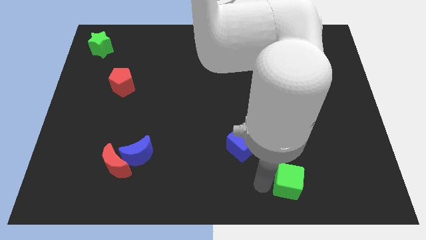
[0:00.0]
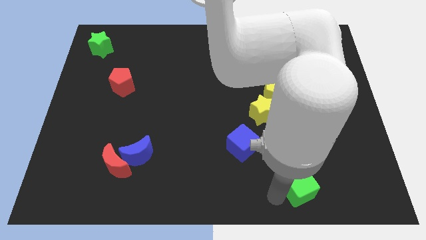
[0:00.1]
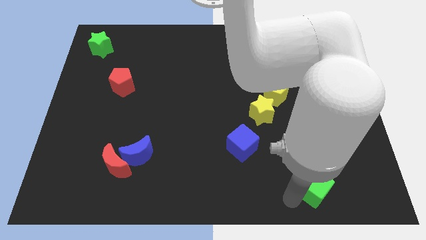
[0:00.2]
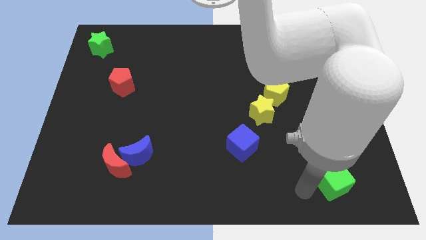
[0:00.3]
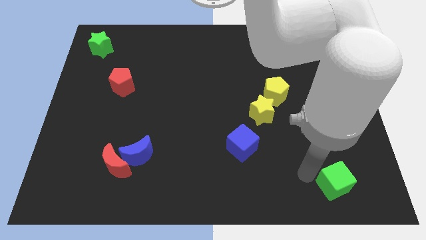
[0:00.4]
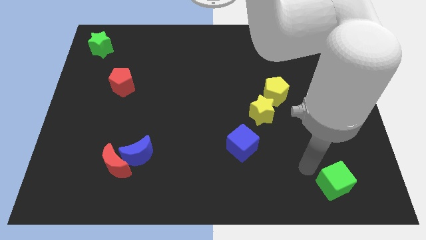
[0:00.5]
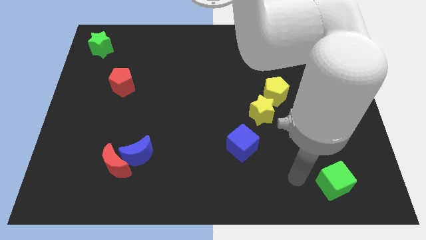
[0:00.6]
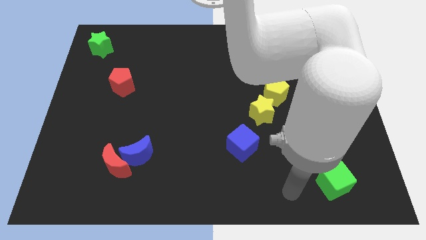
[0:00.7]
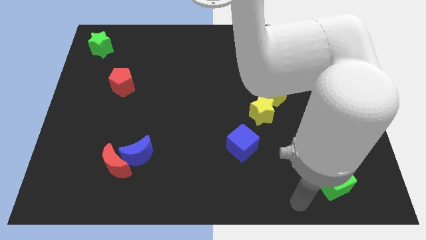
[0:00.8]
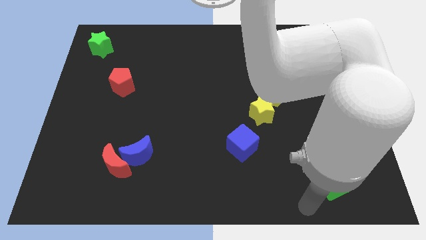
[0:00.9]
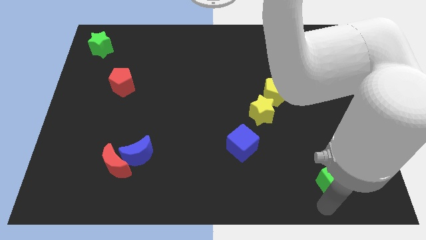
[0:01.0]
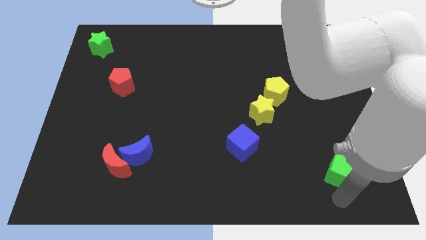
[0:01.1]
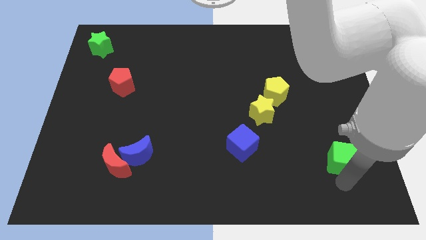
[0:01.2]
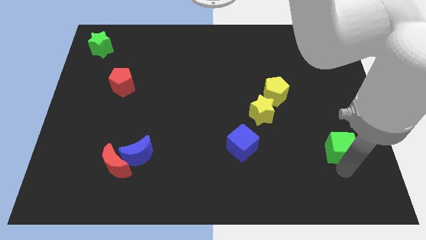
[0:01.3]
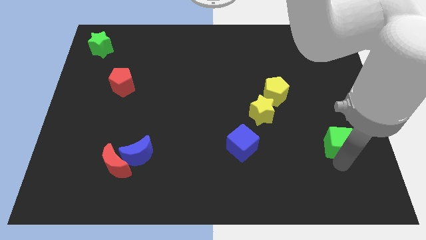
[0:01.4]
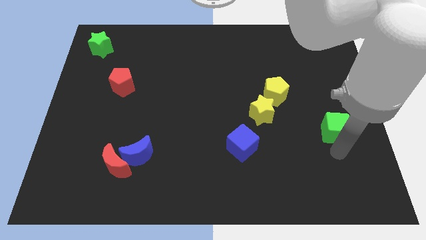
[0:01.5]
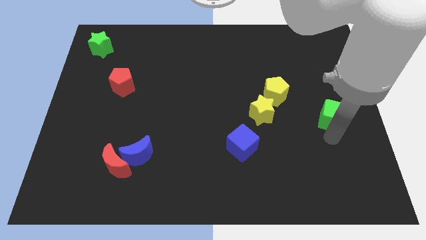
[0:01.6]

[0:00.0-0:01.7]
push the green cube to the right side of the green star

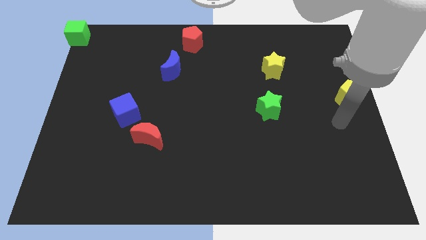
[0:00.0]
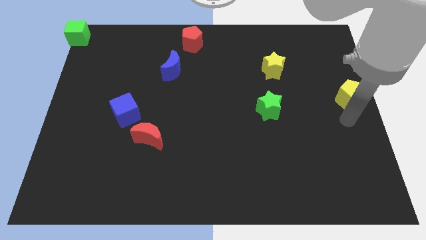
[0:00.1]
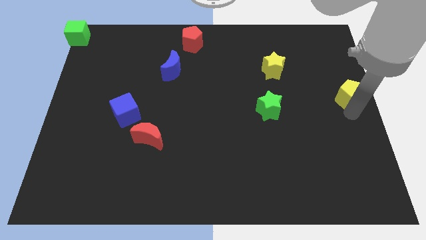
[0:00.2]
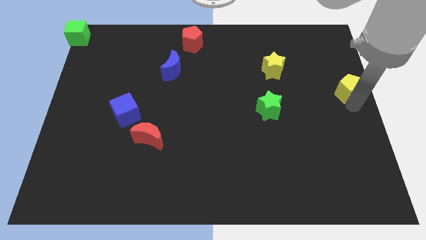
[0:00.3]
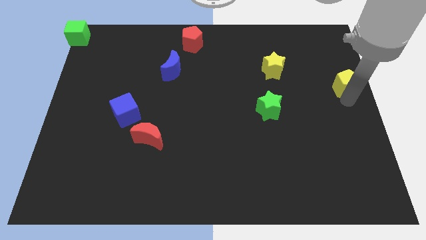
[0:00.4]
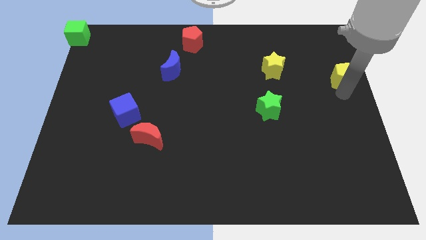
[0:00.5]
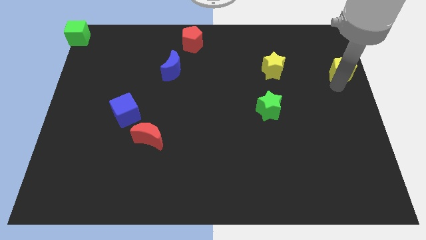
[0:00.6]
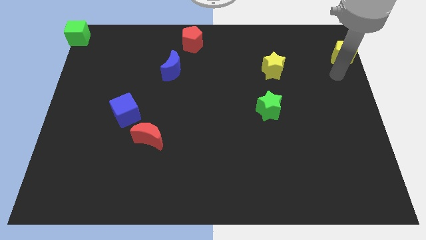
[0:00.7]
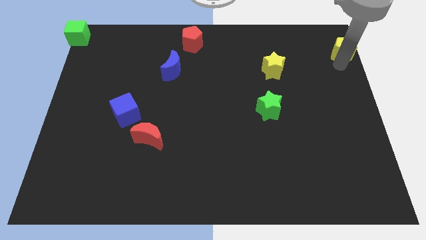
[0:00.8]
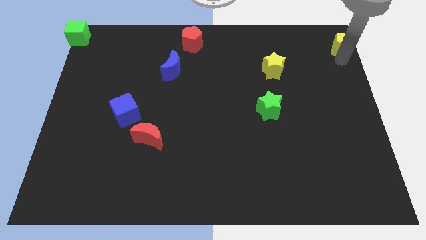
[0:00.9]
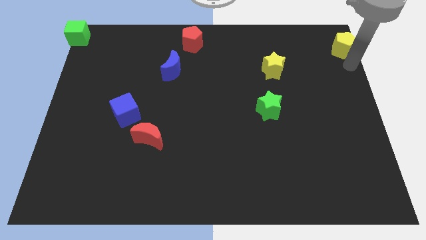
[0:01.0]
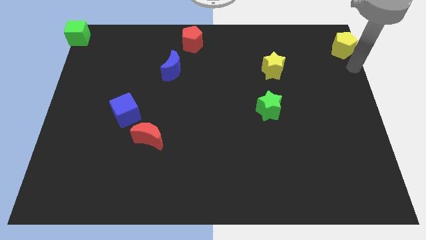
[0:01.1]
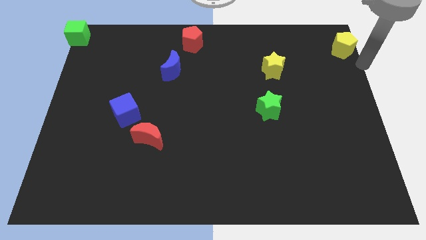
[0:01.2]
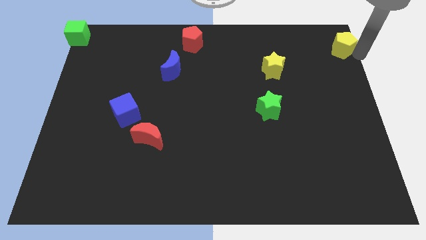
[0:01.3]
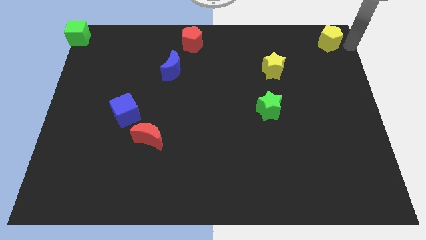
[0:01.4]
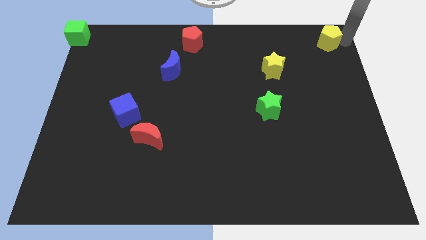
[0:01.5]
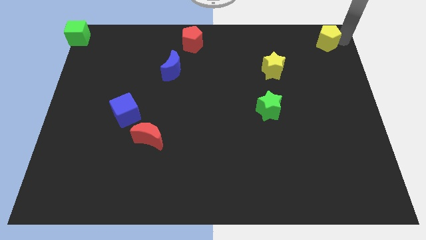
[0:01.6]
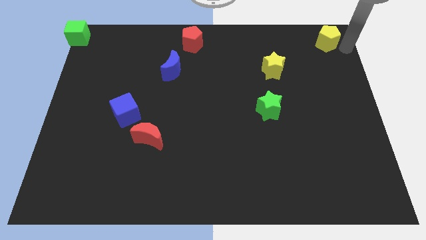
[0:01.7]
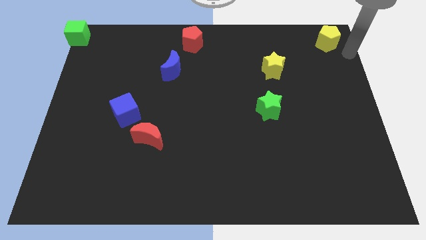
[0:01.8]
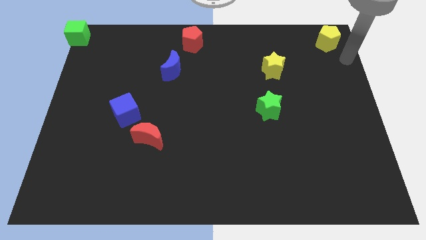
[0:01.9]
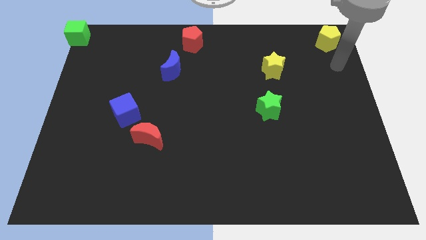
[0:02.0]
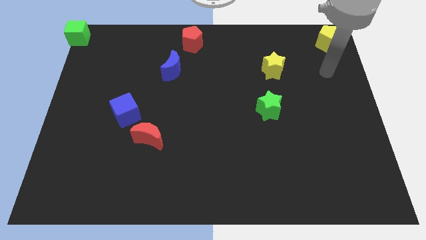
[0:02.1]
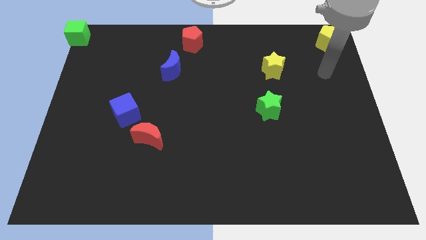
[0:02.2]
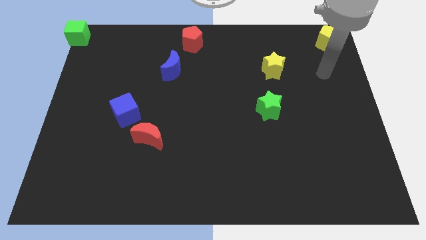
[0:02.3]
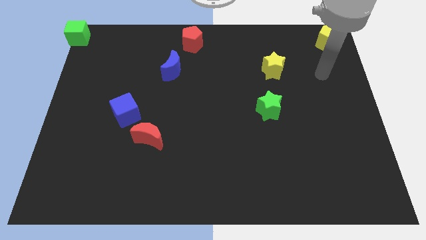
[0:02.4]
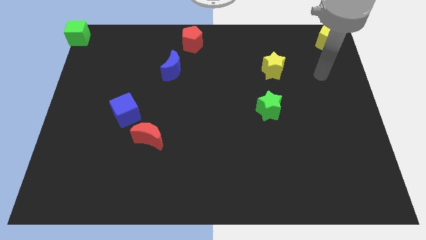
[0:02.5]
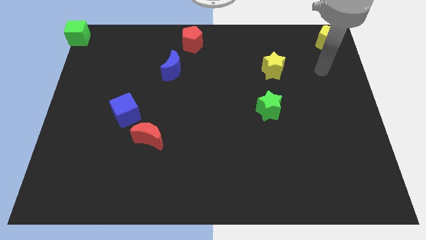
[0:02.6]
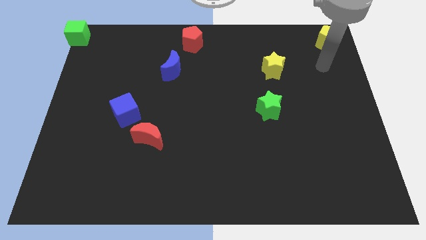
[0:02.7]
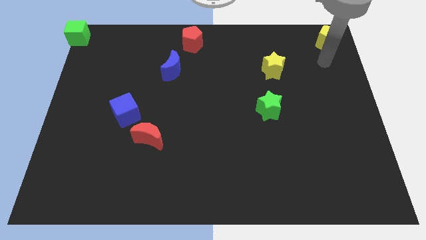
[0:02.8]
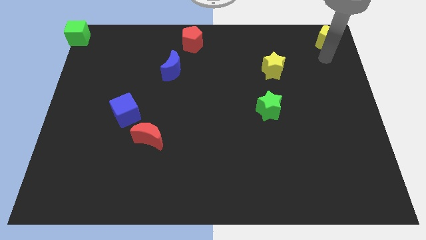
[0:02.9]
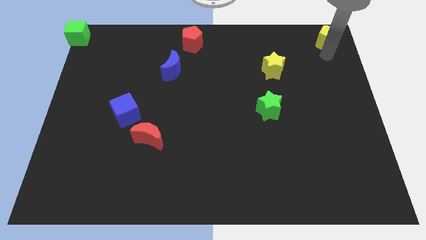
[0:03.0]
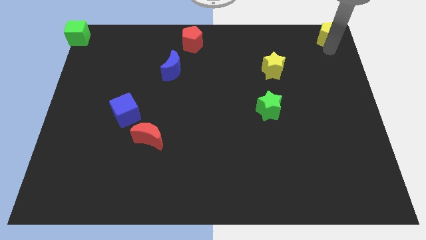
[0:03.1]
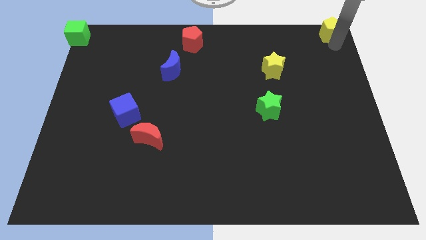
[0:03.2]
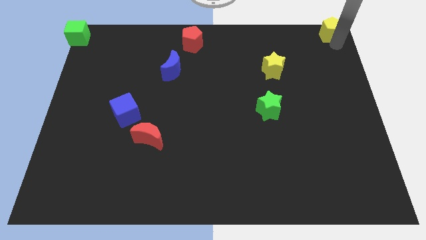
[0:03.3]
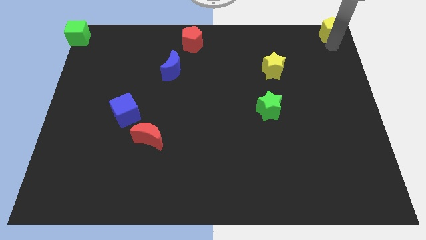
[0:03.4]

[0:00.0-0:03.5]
place yellow pentagon towards top right corner

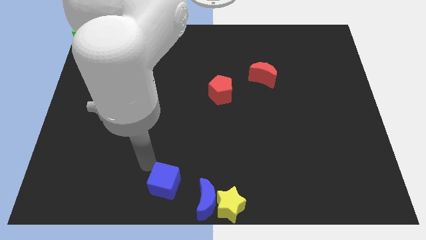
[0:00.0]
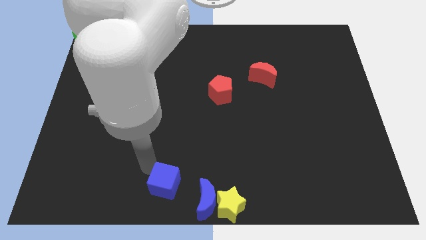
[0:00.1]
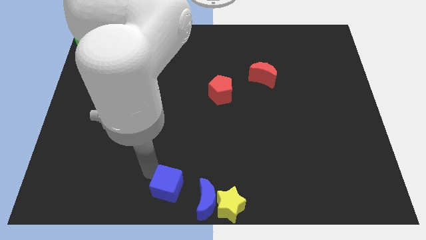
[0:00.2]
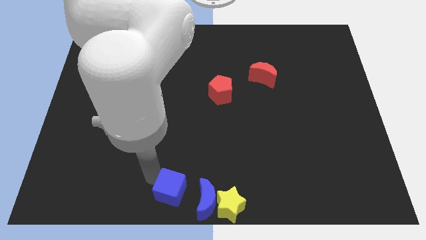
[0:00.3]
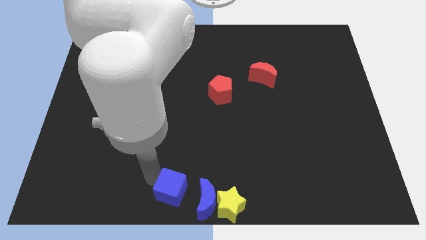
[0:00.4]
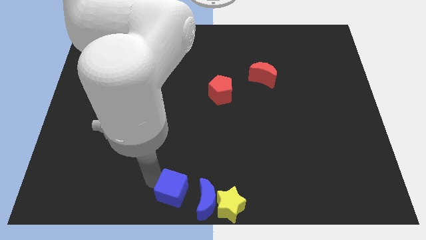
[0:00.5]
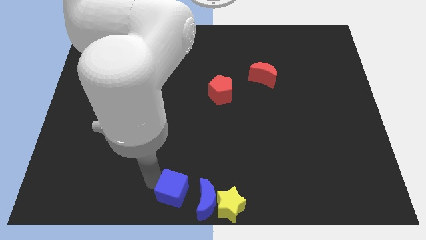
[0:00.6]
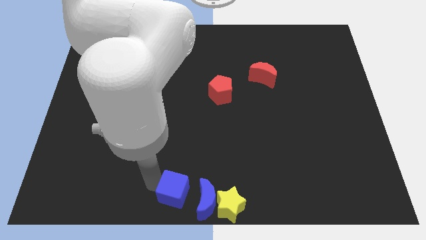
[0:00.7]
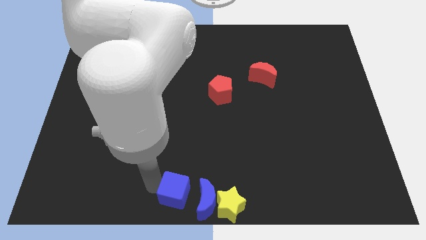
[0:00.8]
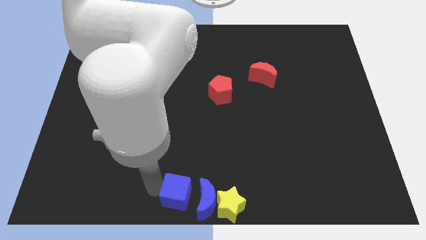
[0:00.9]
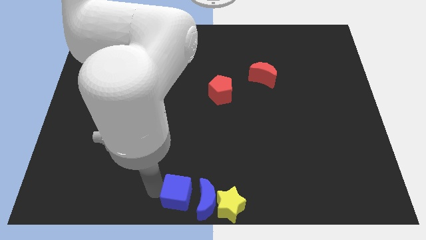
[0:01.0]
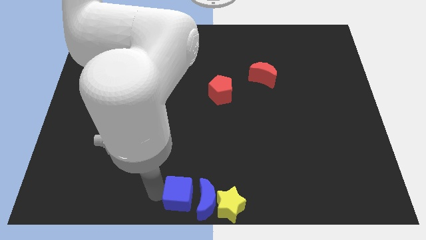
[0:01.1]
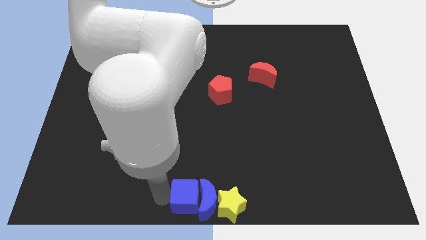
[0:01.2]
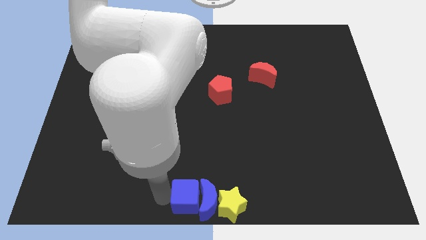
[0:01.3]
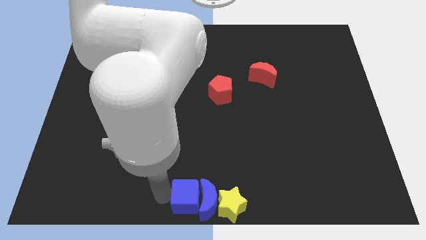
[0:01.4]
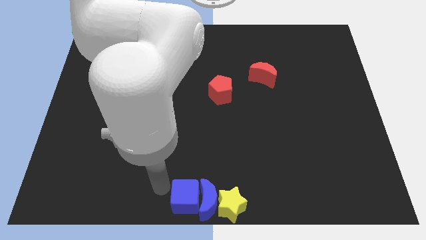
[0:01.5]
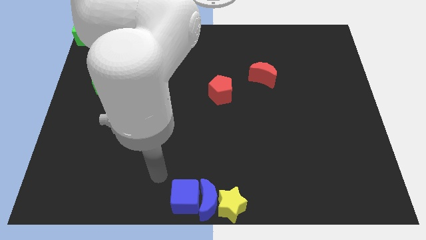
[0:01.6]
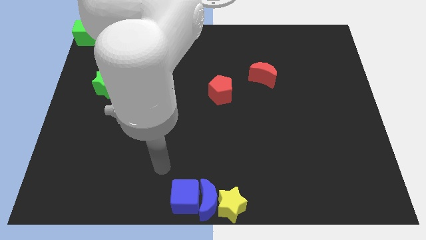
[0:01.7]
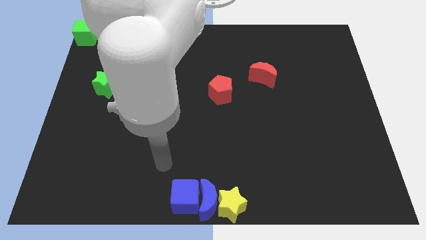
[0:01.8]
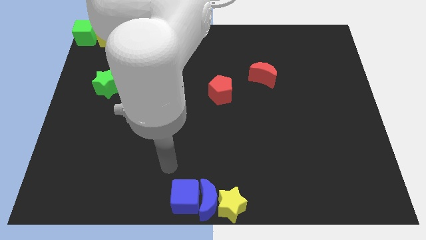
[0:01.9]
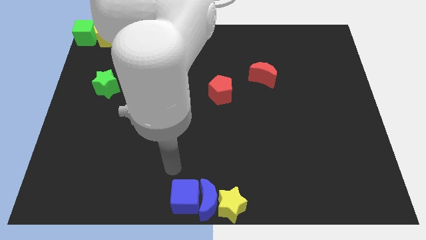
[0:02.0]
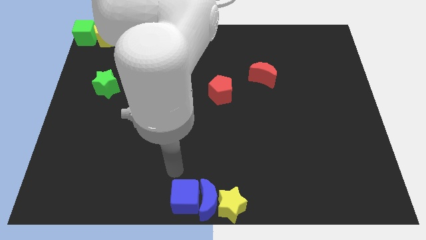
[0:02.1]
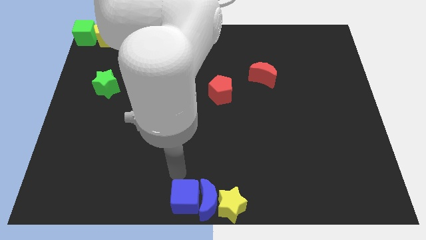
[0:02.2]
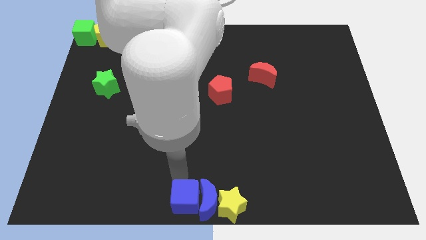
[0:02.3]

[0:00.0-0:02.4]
push the blue cube into the blue crescent

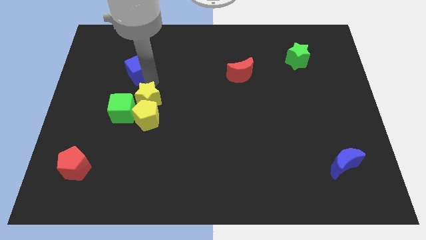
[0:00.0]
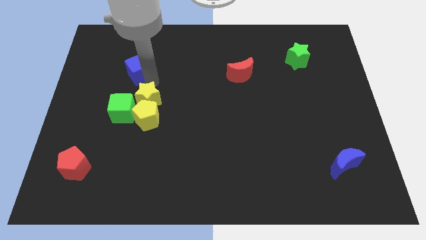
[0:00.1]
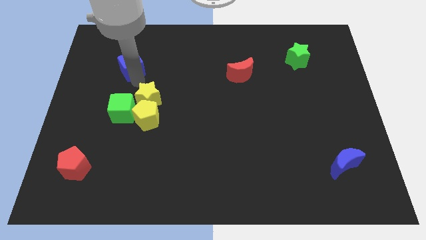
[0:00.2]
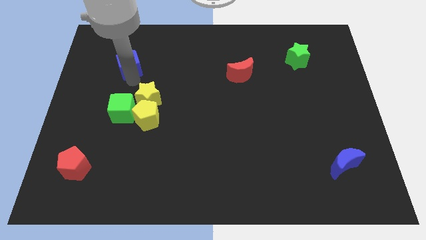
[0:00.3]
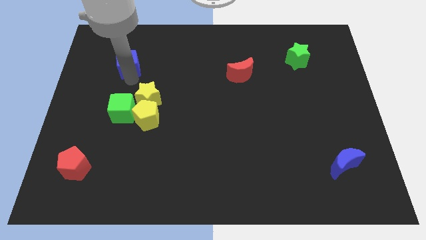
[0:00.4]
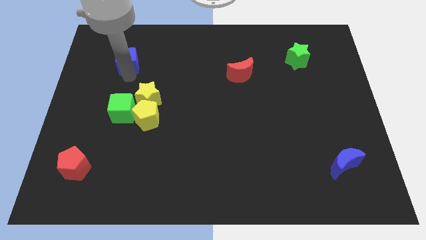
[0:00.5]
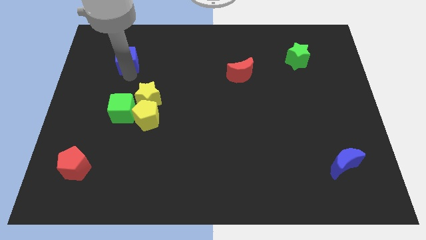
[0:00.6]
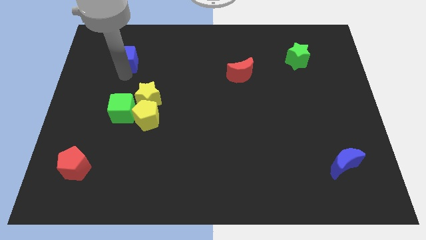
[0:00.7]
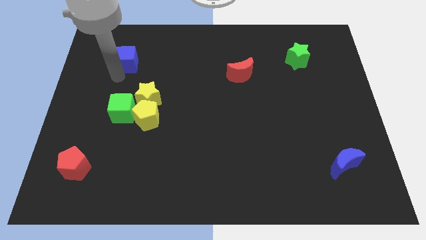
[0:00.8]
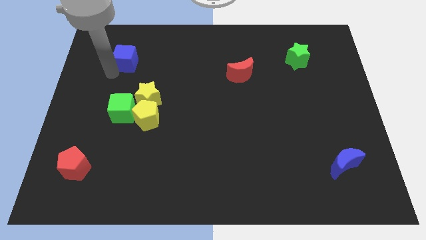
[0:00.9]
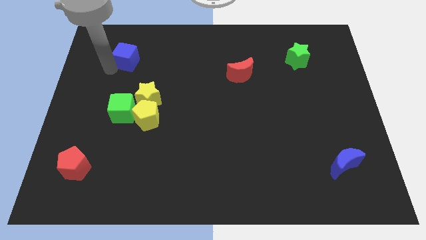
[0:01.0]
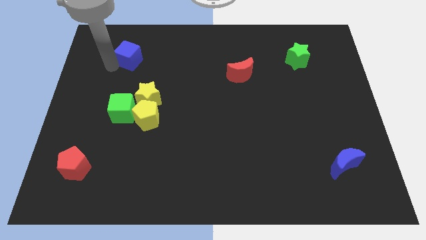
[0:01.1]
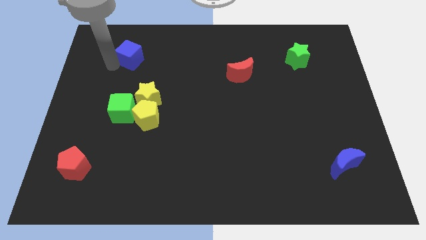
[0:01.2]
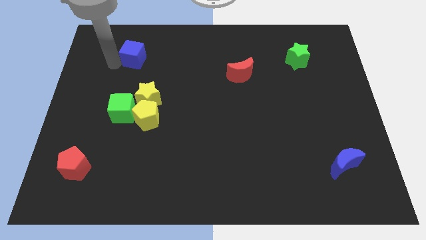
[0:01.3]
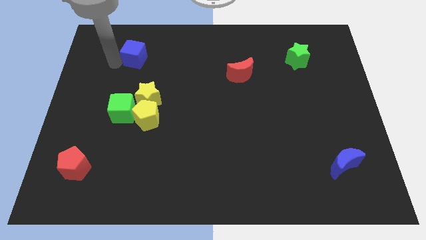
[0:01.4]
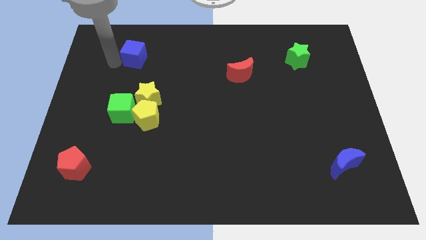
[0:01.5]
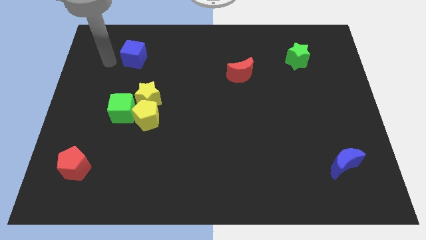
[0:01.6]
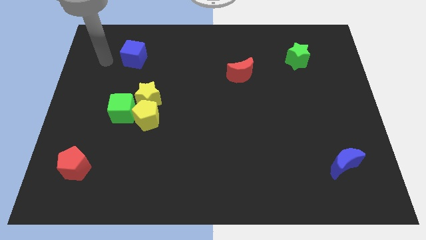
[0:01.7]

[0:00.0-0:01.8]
separate the blue cube from yellow star
